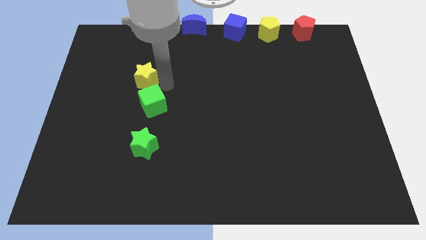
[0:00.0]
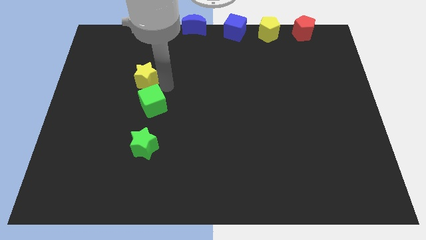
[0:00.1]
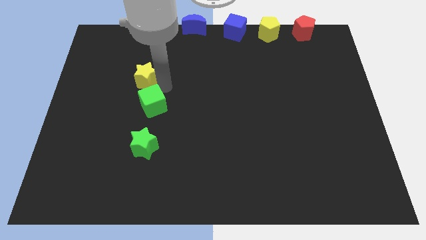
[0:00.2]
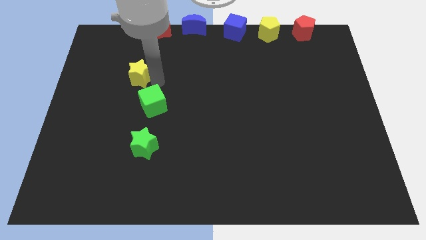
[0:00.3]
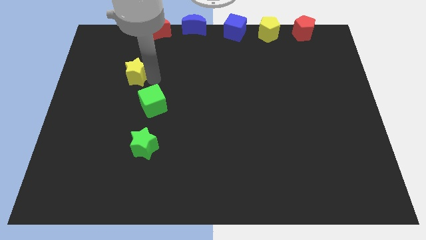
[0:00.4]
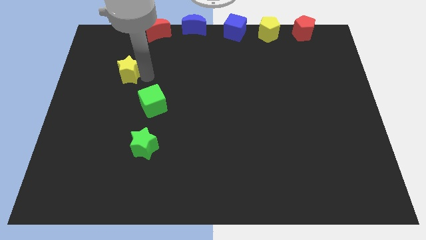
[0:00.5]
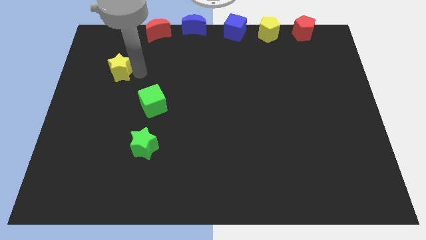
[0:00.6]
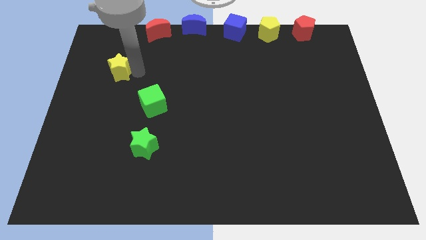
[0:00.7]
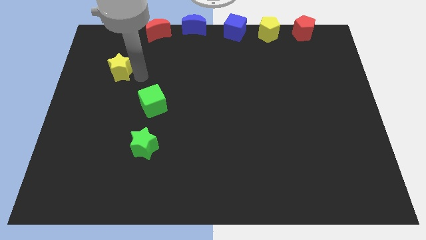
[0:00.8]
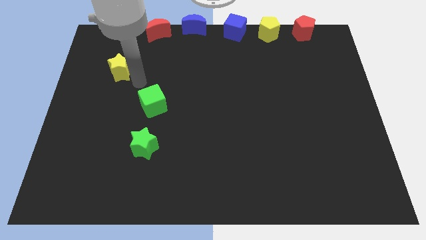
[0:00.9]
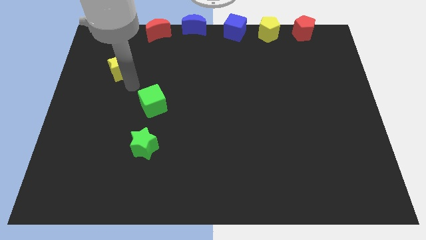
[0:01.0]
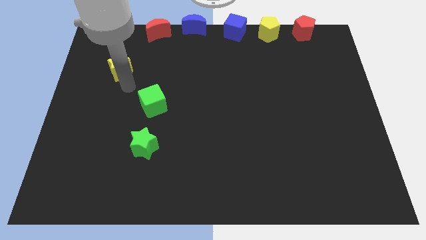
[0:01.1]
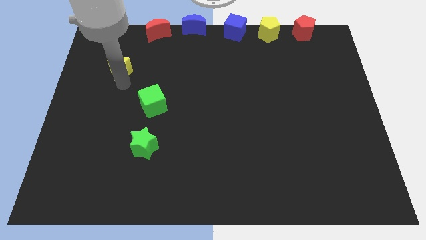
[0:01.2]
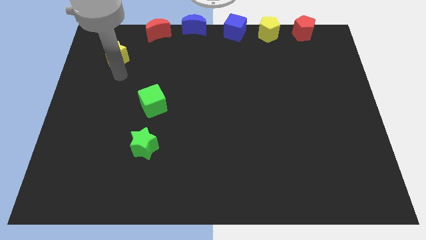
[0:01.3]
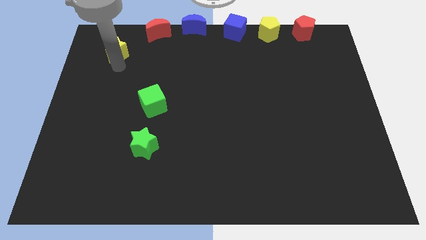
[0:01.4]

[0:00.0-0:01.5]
drag the yellow star diagonally on the bottom left side of the red crescent

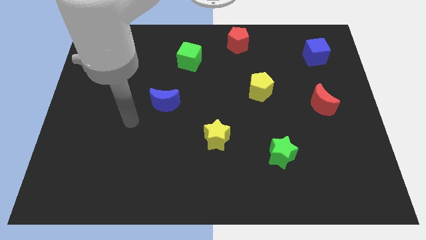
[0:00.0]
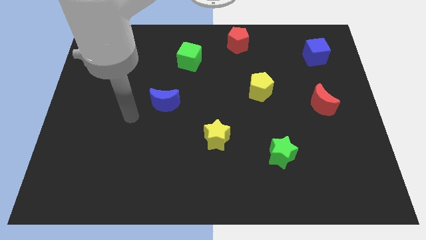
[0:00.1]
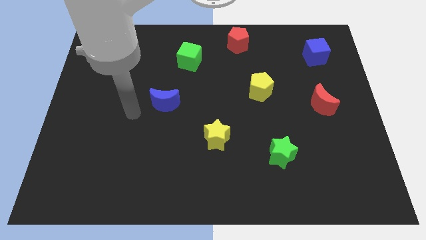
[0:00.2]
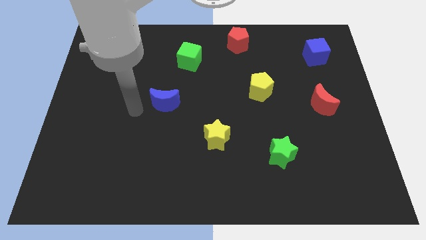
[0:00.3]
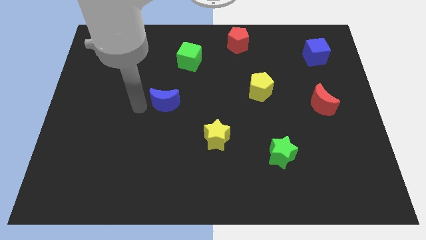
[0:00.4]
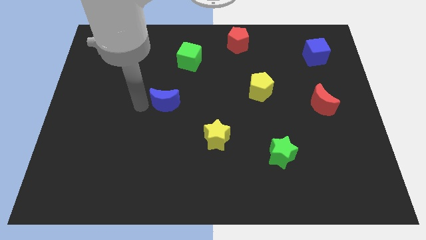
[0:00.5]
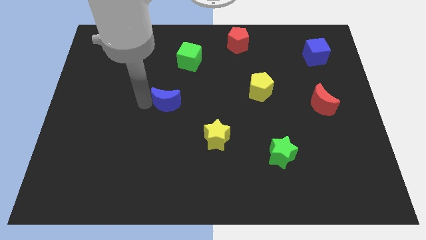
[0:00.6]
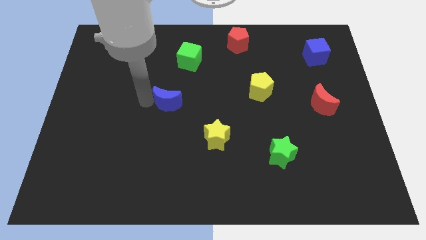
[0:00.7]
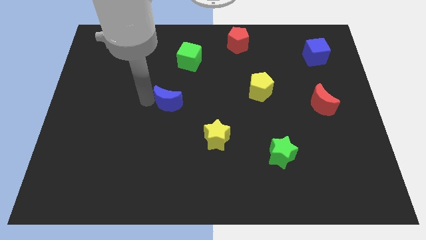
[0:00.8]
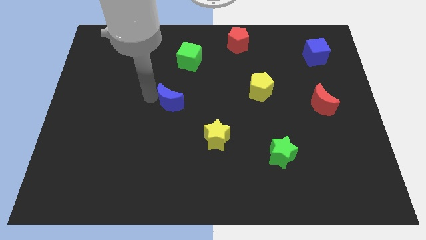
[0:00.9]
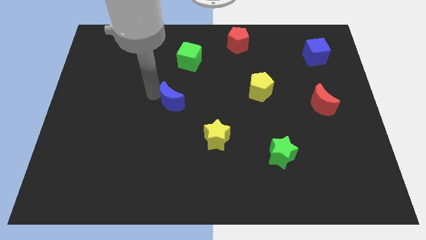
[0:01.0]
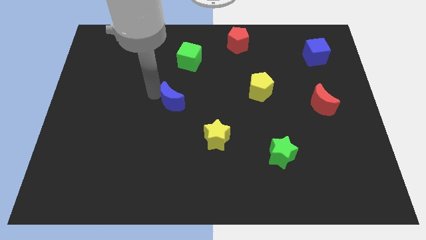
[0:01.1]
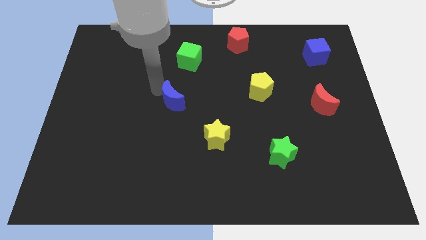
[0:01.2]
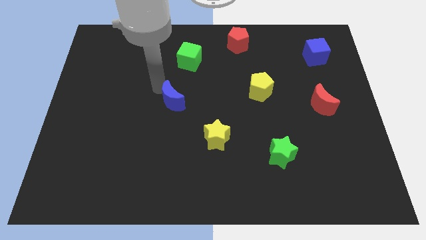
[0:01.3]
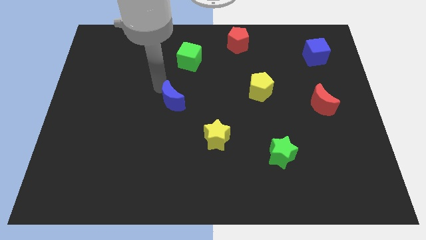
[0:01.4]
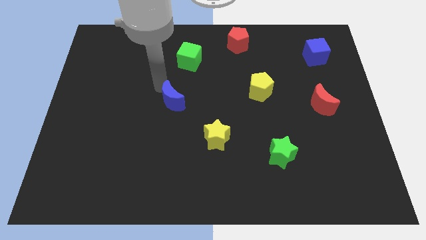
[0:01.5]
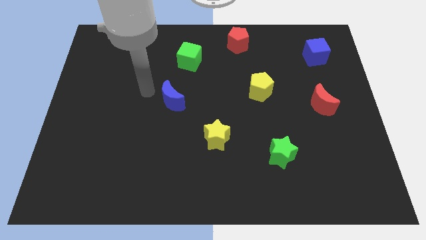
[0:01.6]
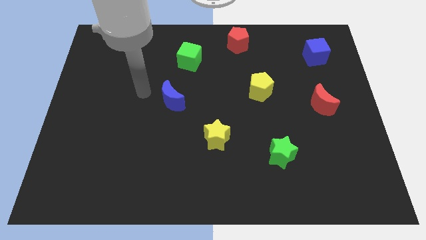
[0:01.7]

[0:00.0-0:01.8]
rotate the blue moon to the top side

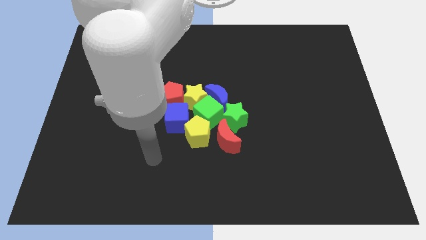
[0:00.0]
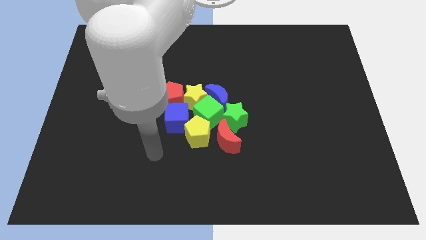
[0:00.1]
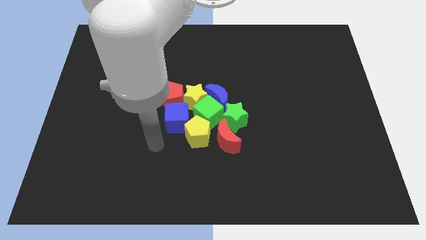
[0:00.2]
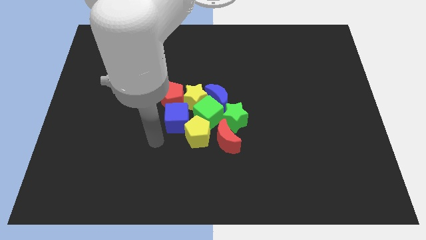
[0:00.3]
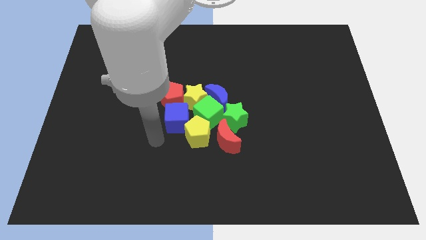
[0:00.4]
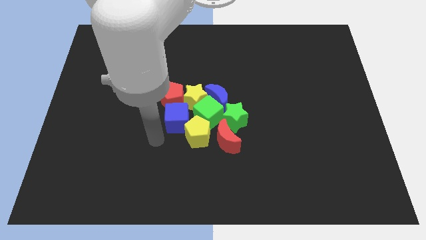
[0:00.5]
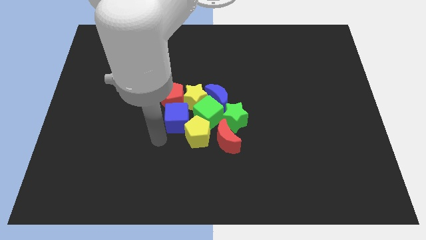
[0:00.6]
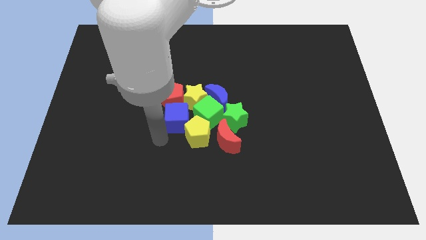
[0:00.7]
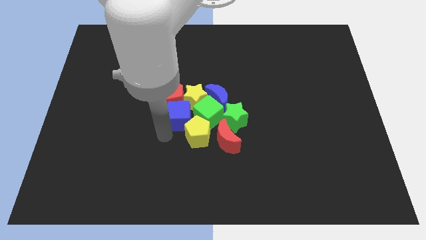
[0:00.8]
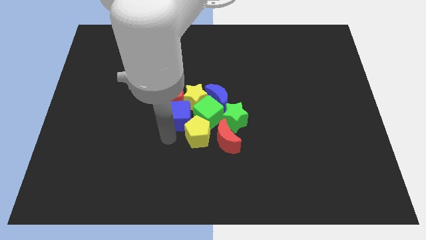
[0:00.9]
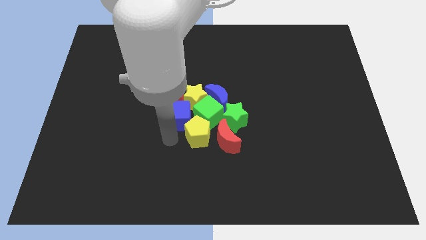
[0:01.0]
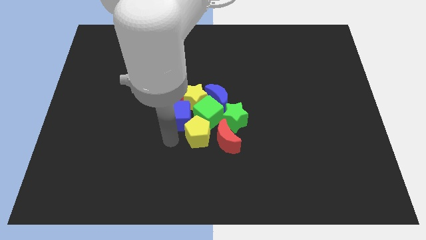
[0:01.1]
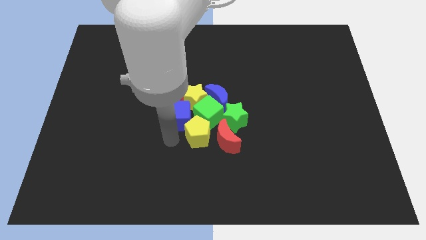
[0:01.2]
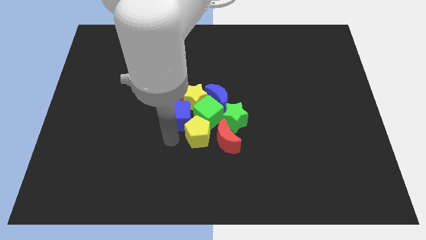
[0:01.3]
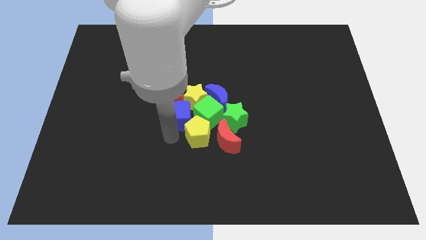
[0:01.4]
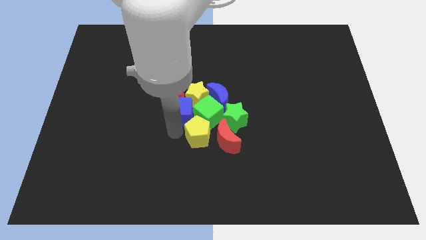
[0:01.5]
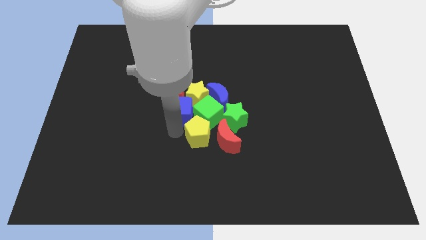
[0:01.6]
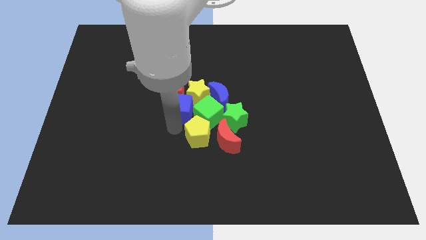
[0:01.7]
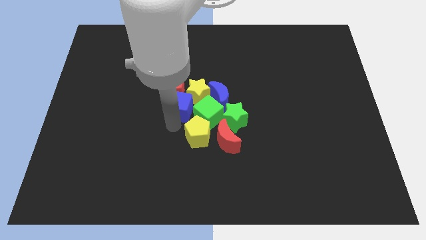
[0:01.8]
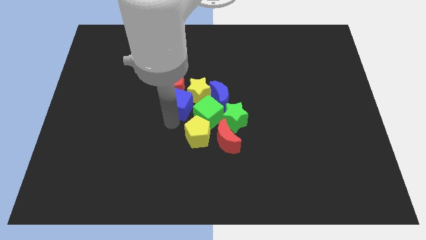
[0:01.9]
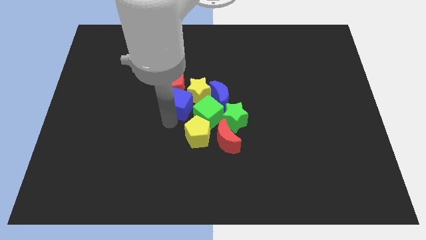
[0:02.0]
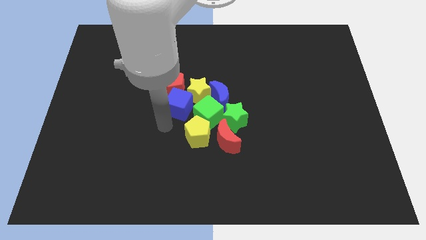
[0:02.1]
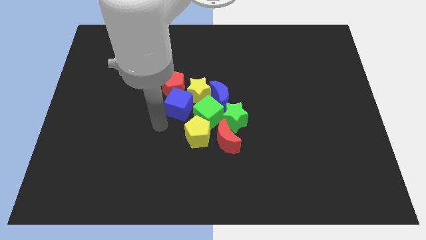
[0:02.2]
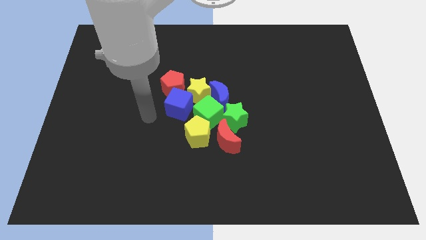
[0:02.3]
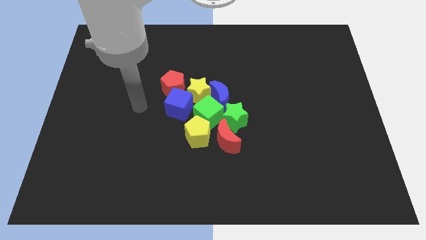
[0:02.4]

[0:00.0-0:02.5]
slightly push the blue cube into the group of blocks

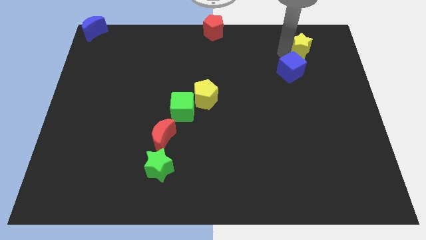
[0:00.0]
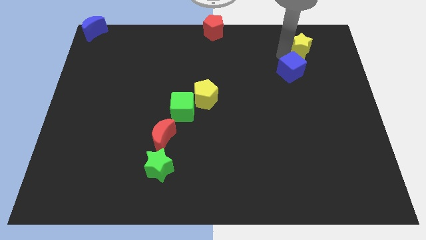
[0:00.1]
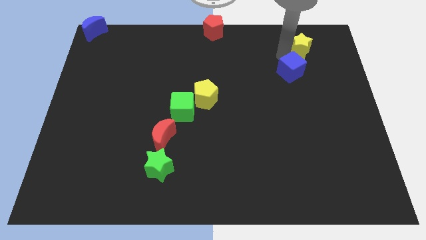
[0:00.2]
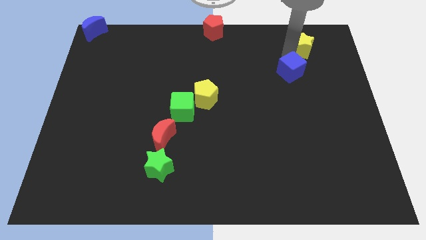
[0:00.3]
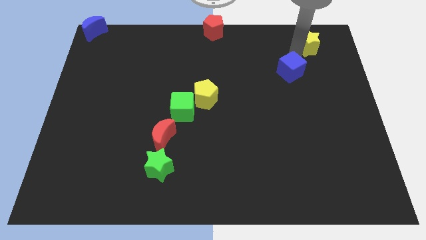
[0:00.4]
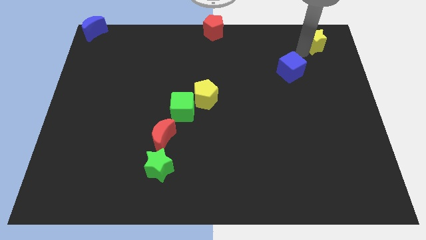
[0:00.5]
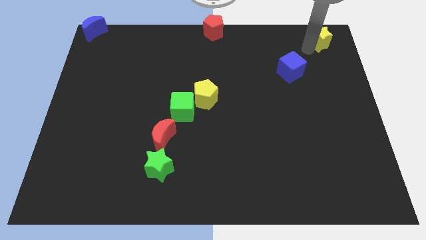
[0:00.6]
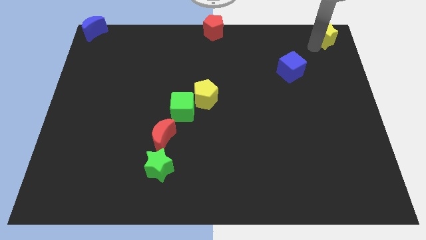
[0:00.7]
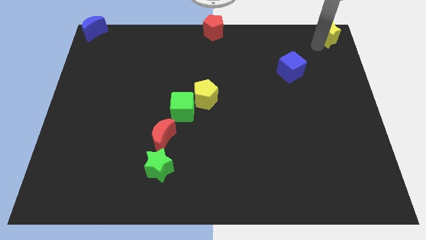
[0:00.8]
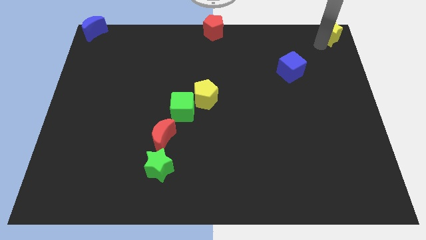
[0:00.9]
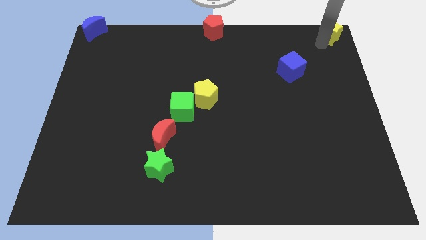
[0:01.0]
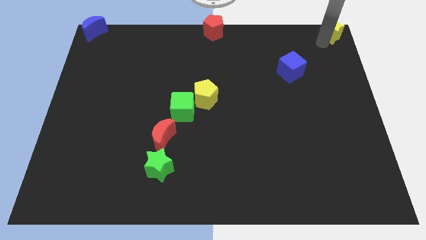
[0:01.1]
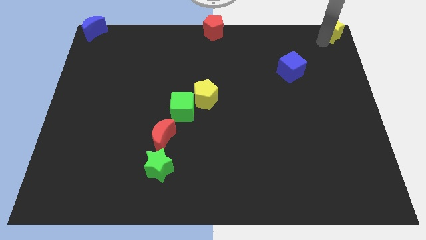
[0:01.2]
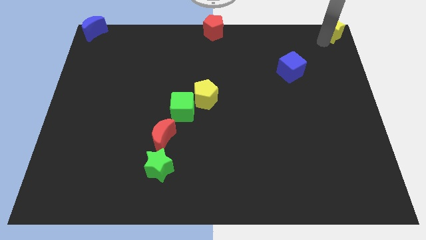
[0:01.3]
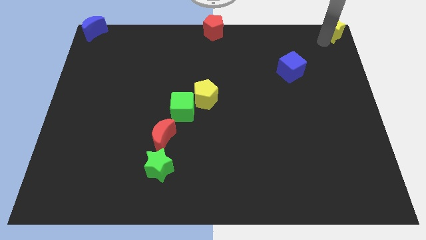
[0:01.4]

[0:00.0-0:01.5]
move the yellow star to the top right corner of the board

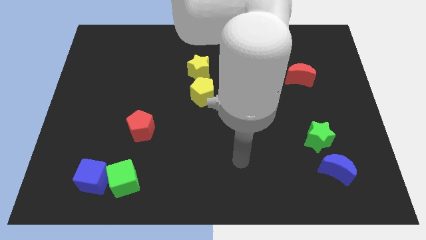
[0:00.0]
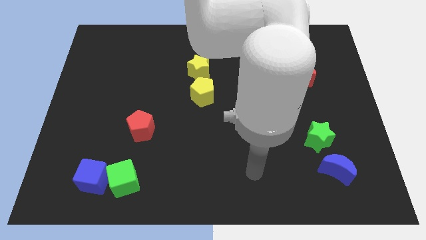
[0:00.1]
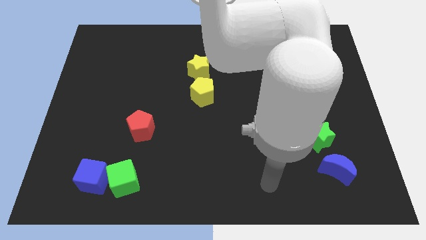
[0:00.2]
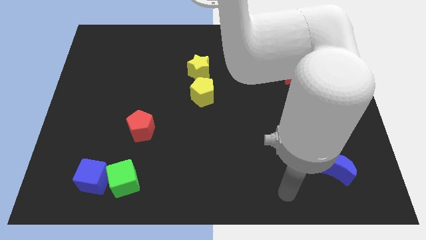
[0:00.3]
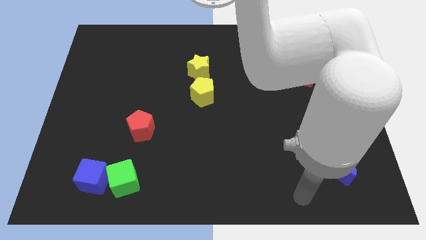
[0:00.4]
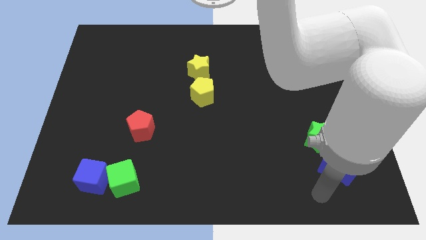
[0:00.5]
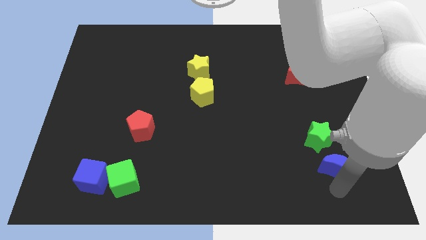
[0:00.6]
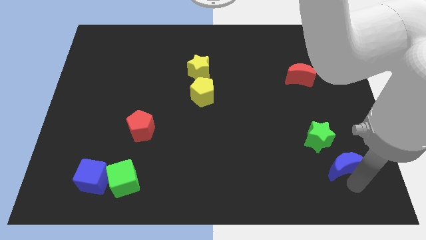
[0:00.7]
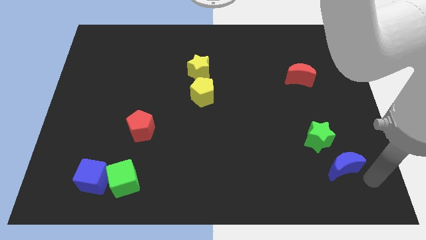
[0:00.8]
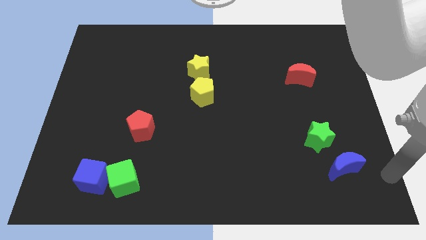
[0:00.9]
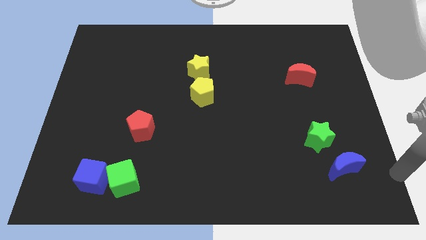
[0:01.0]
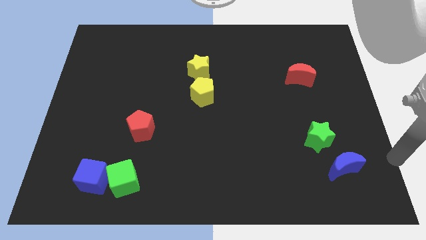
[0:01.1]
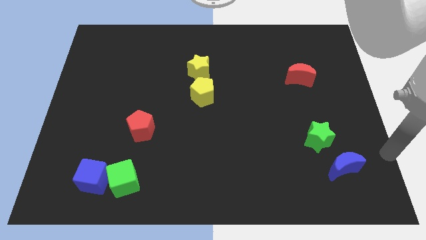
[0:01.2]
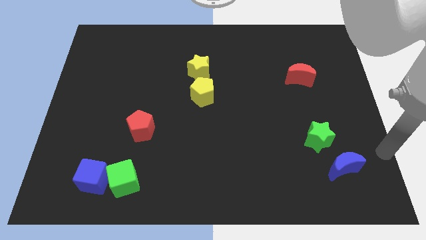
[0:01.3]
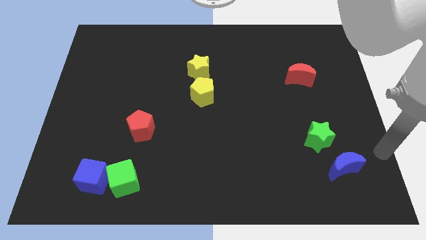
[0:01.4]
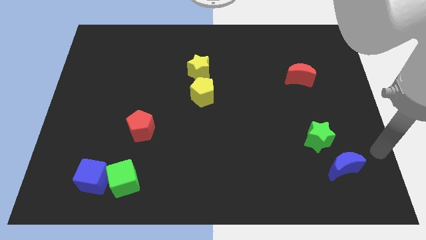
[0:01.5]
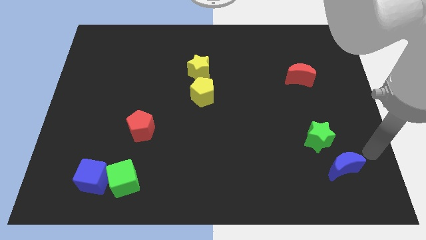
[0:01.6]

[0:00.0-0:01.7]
slightly tap the blue crescent
